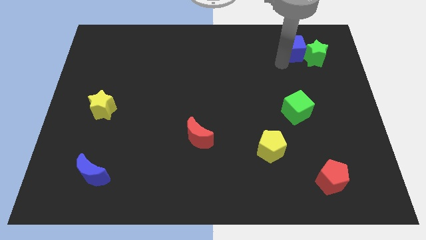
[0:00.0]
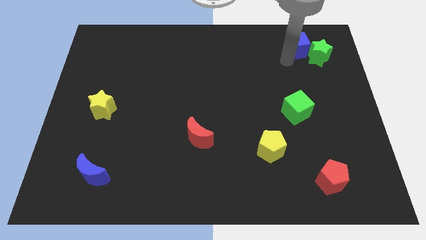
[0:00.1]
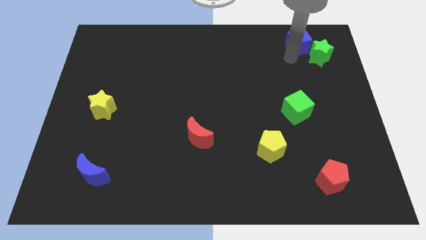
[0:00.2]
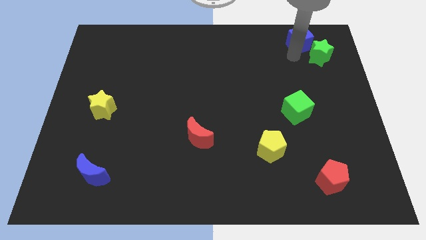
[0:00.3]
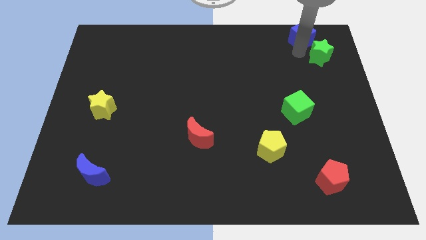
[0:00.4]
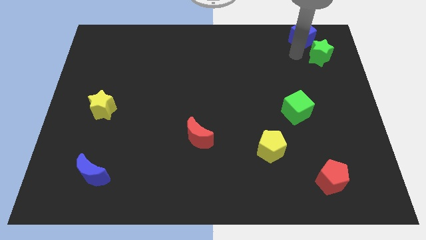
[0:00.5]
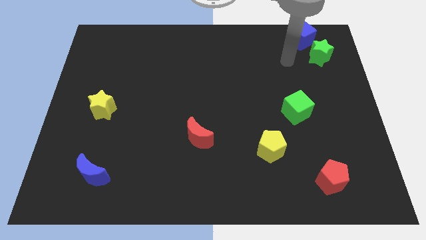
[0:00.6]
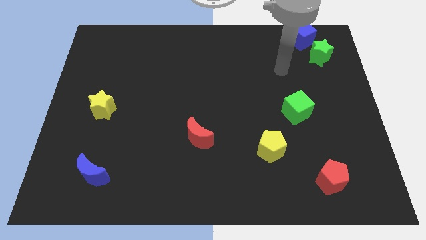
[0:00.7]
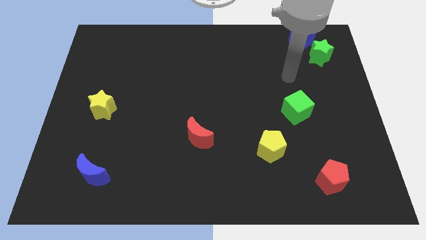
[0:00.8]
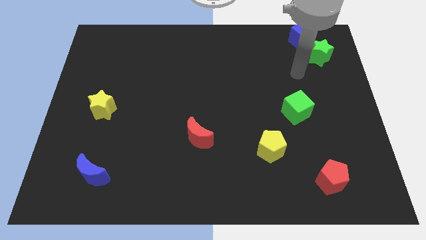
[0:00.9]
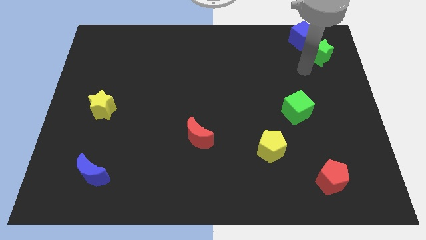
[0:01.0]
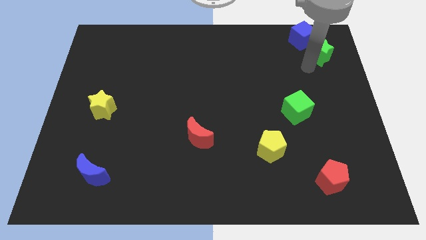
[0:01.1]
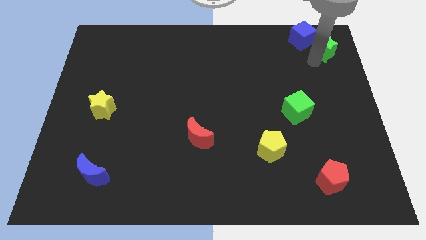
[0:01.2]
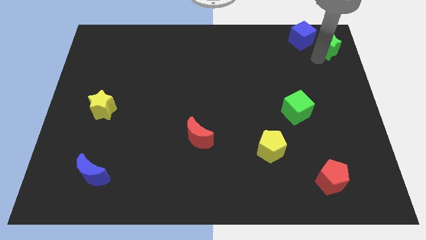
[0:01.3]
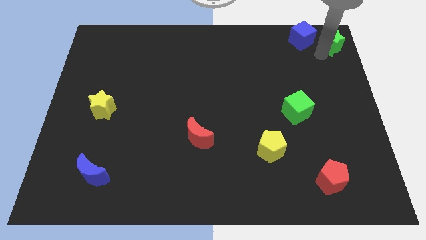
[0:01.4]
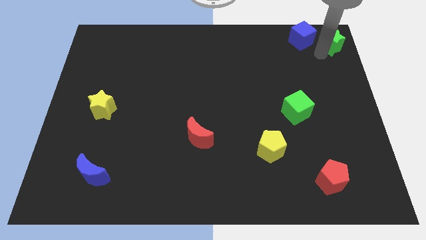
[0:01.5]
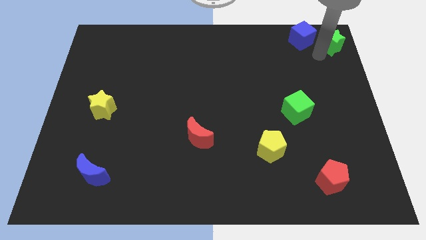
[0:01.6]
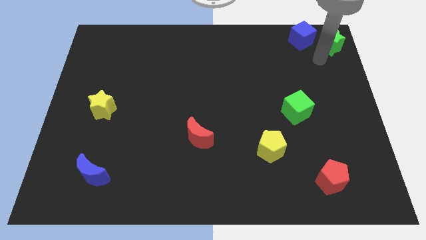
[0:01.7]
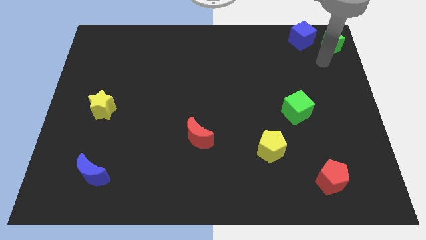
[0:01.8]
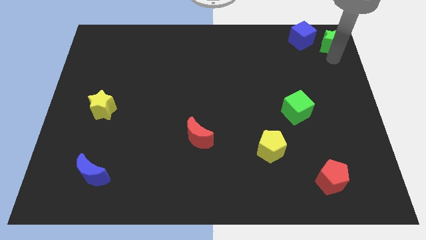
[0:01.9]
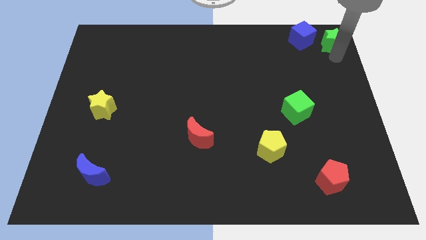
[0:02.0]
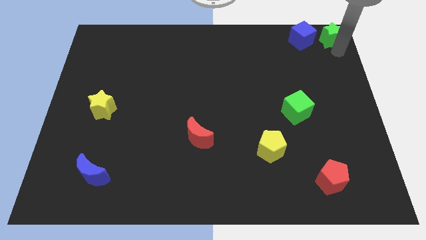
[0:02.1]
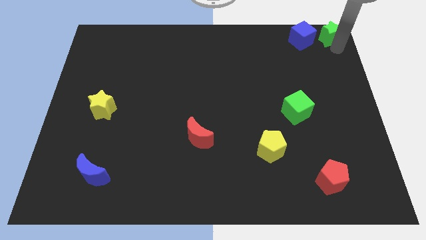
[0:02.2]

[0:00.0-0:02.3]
move the green star and the blue cube to the top of the board

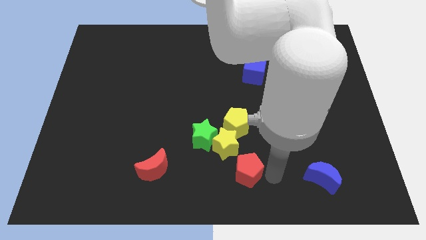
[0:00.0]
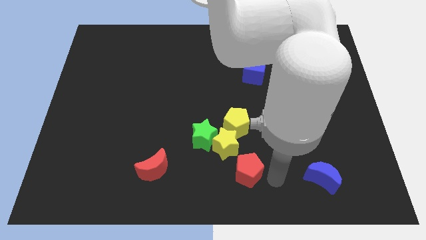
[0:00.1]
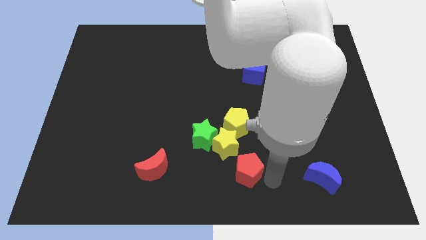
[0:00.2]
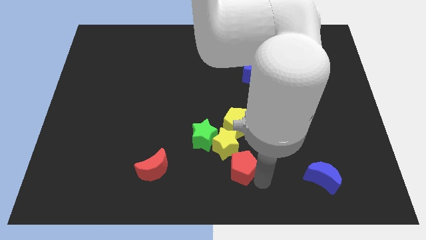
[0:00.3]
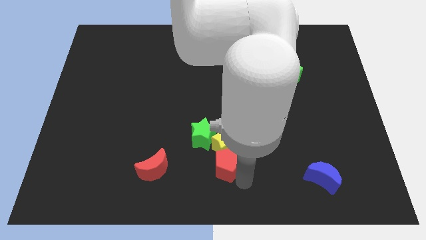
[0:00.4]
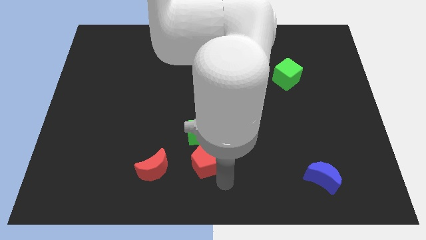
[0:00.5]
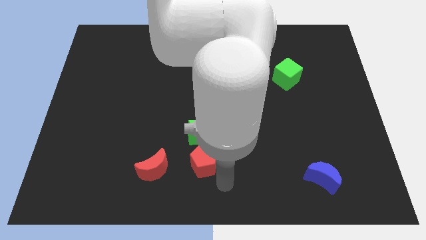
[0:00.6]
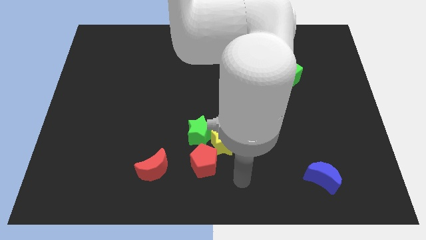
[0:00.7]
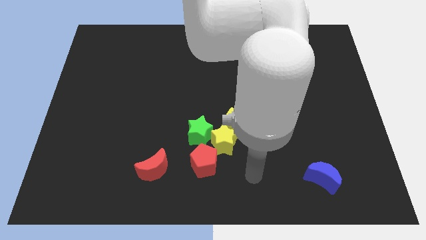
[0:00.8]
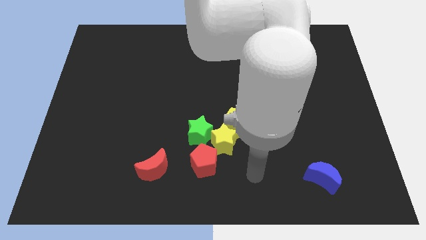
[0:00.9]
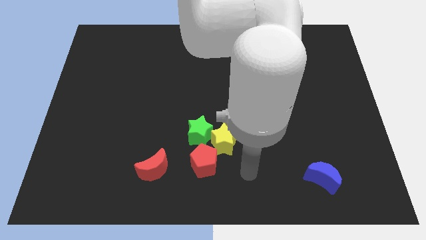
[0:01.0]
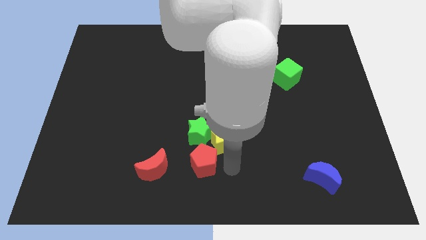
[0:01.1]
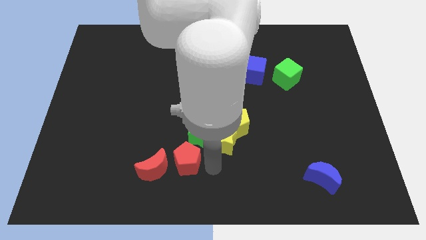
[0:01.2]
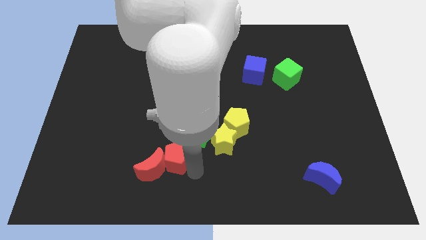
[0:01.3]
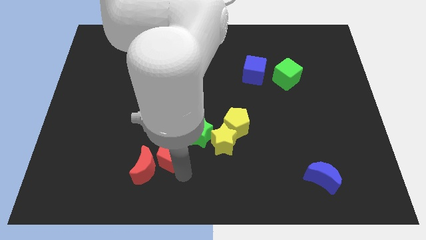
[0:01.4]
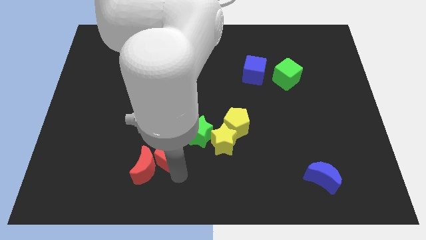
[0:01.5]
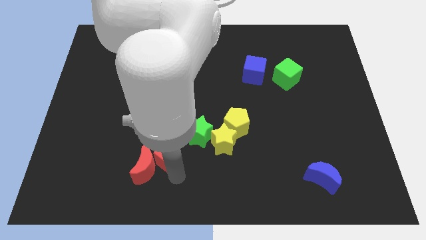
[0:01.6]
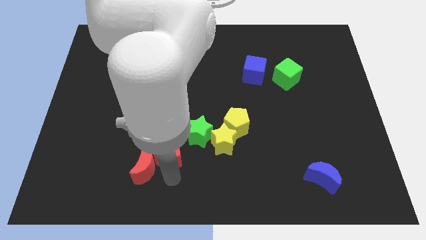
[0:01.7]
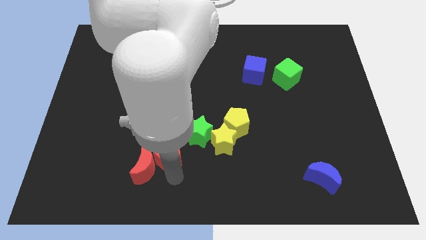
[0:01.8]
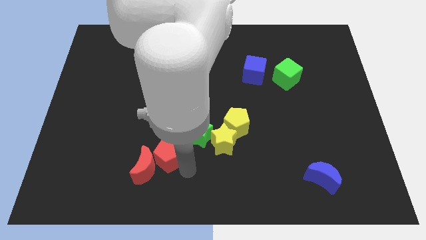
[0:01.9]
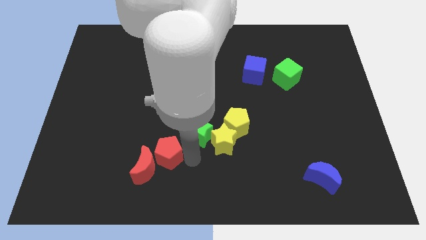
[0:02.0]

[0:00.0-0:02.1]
move the red penatgon close to the red crescent

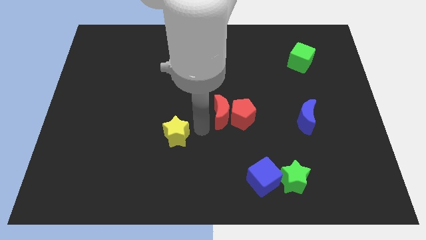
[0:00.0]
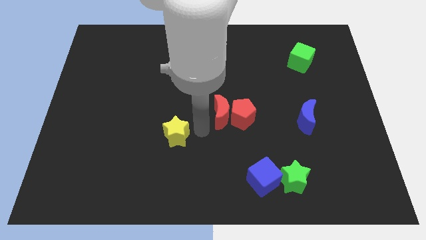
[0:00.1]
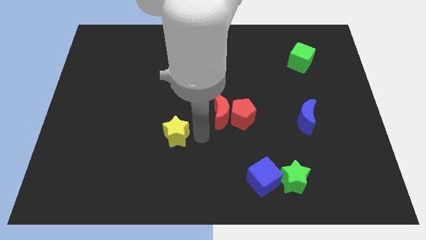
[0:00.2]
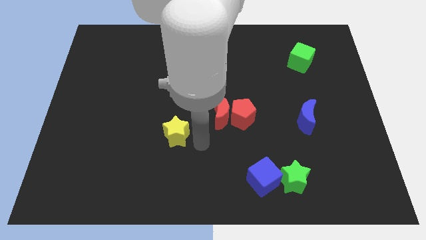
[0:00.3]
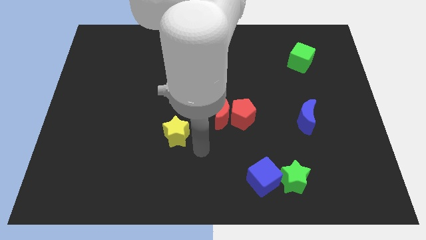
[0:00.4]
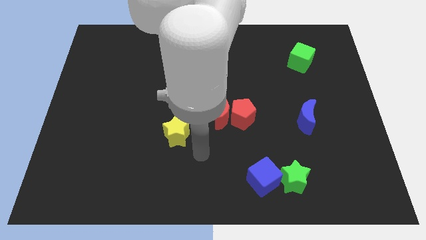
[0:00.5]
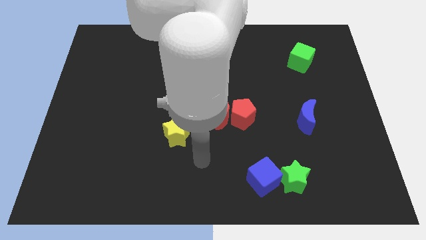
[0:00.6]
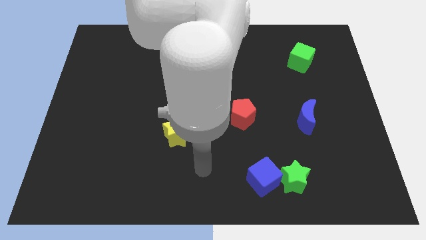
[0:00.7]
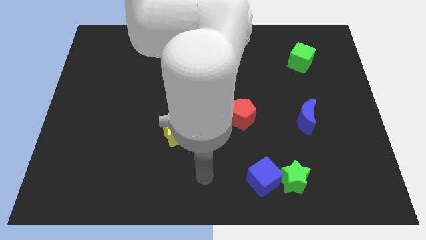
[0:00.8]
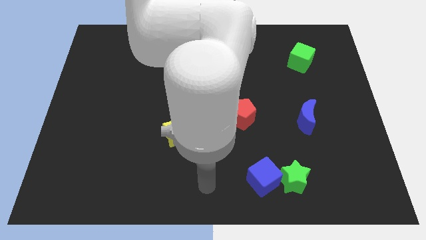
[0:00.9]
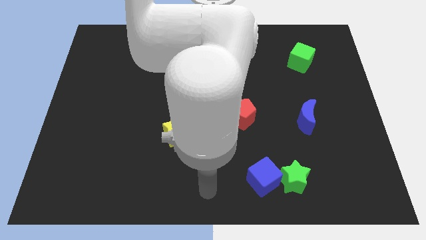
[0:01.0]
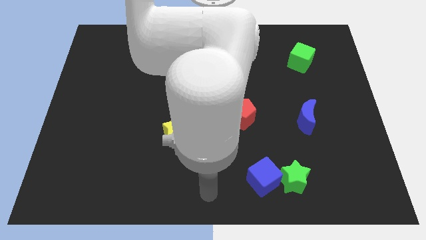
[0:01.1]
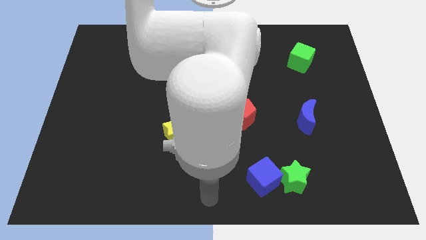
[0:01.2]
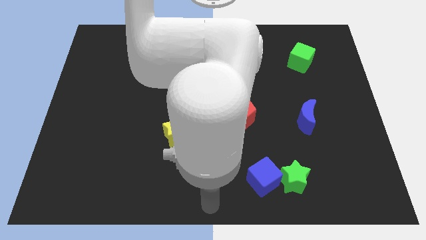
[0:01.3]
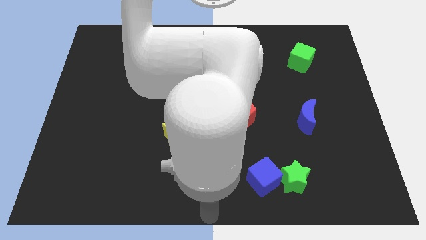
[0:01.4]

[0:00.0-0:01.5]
move your arm at the bottom center of the board

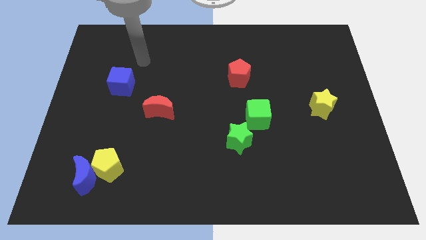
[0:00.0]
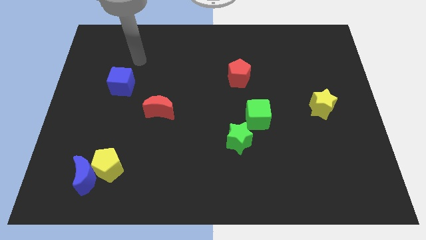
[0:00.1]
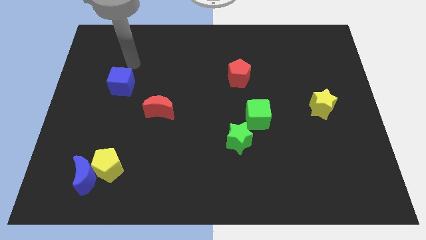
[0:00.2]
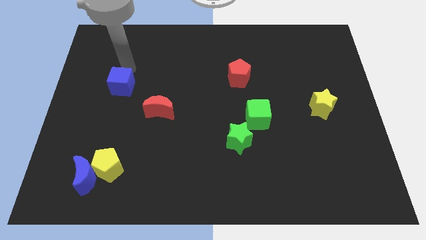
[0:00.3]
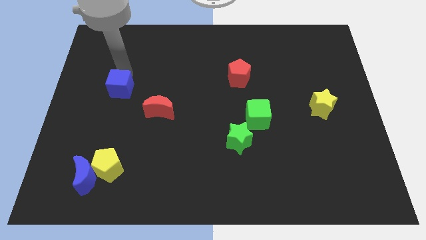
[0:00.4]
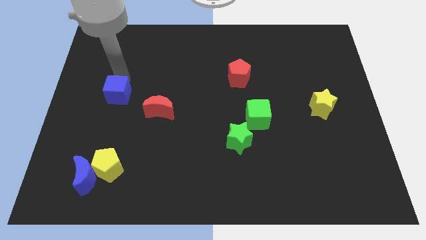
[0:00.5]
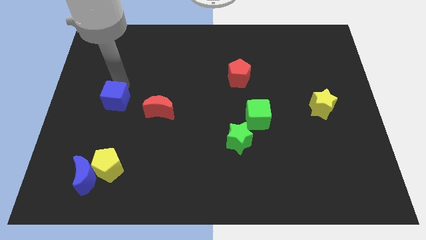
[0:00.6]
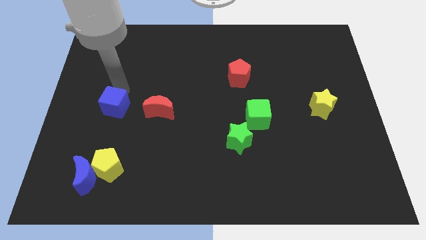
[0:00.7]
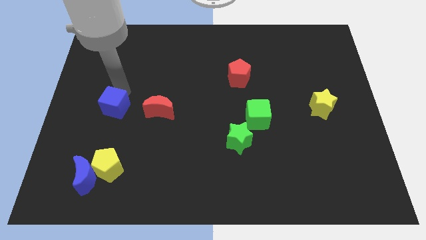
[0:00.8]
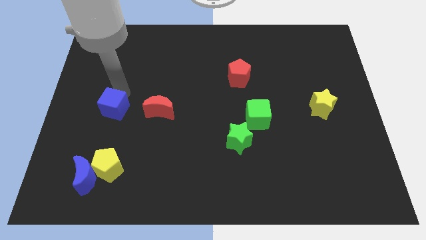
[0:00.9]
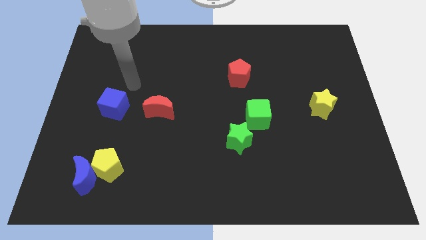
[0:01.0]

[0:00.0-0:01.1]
move blue cube to the left of red moon

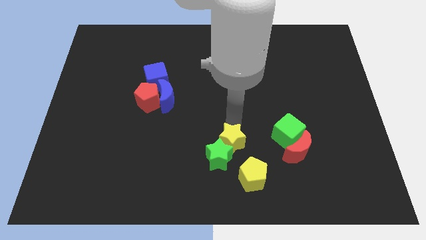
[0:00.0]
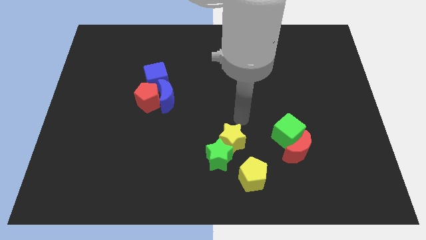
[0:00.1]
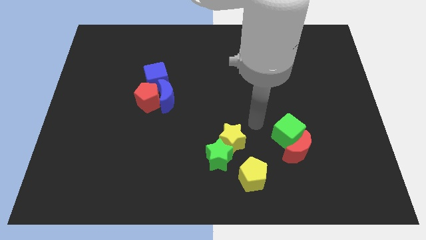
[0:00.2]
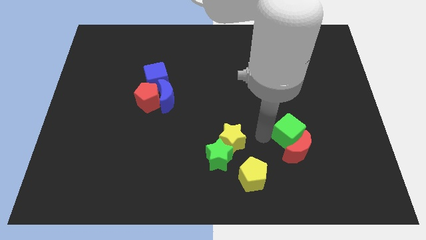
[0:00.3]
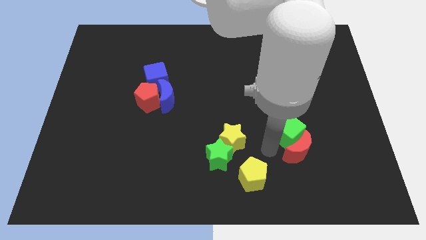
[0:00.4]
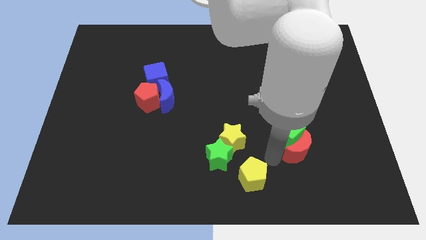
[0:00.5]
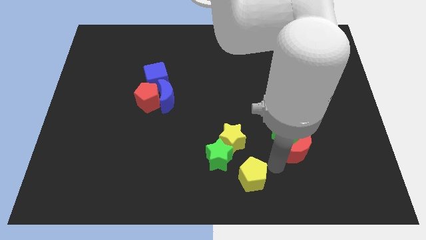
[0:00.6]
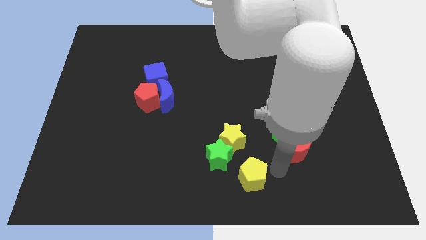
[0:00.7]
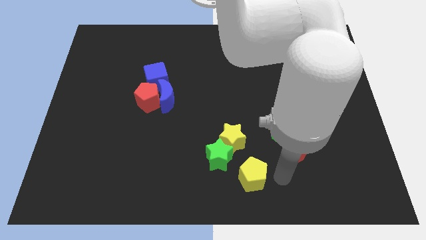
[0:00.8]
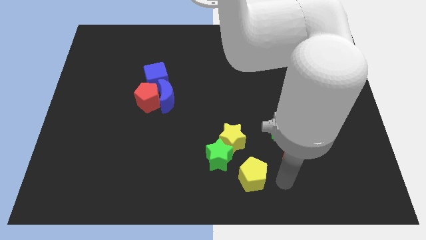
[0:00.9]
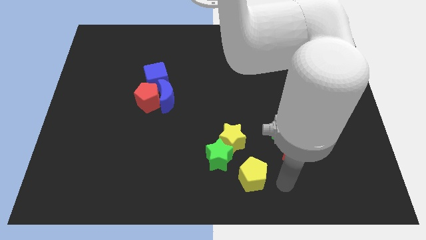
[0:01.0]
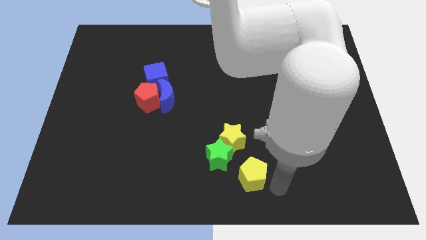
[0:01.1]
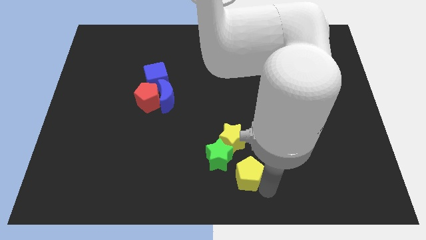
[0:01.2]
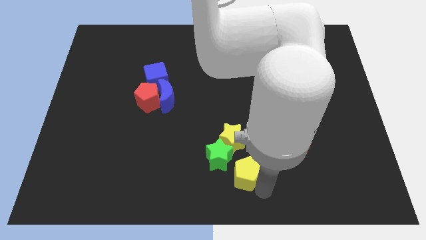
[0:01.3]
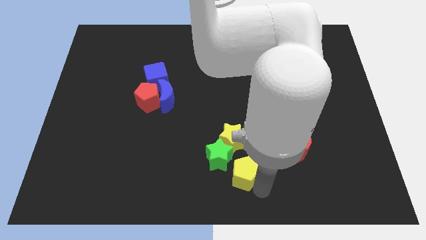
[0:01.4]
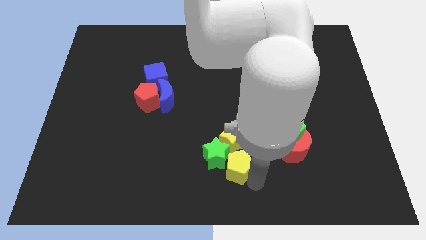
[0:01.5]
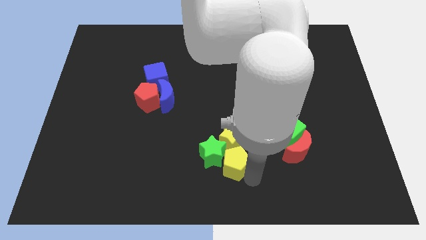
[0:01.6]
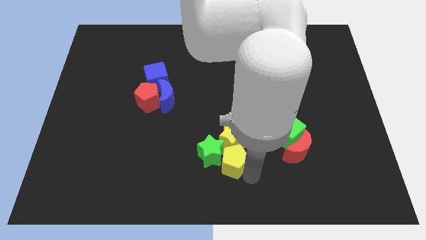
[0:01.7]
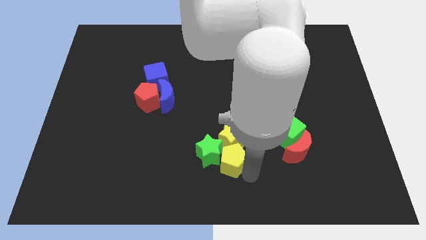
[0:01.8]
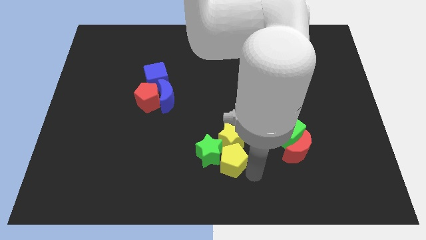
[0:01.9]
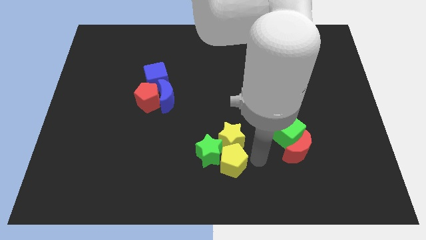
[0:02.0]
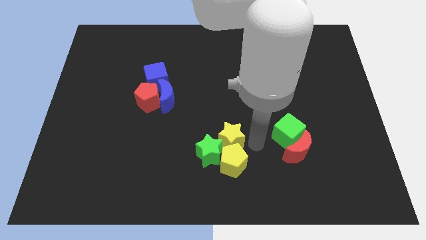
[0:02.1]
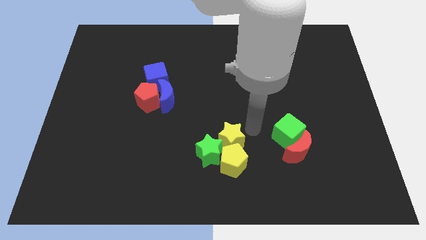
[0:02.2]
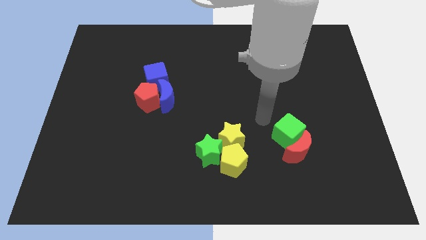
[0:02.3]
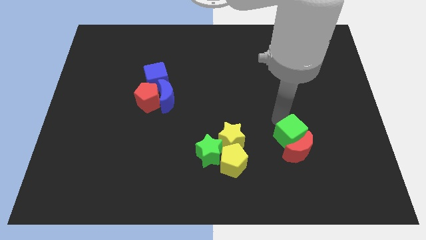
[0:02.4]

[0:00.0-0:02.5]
bring yellow pentagon into both the stars
